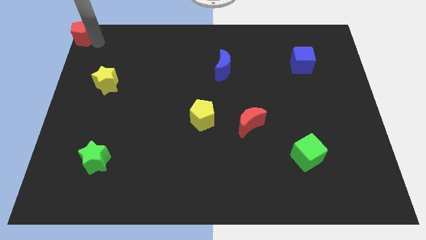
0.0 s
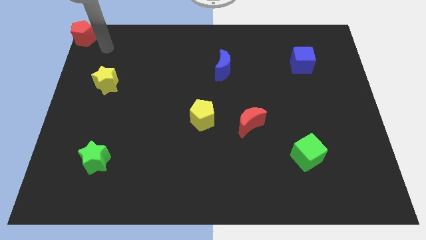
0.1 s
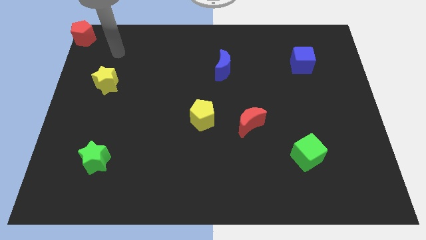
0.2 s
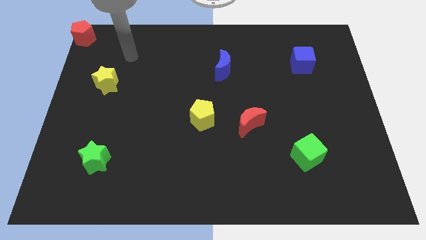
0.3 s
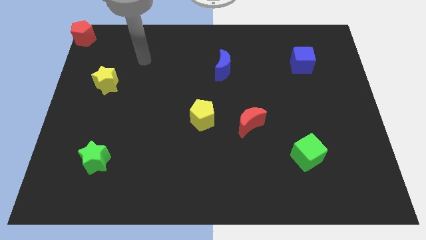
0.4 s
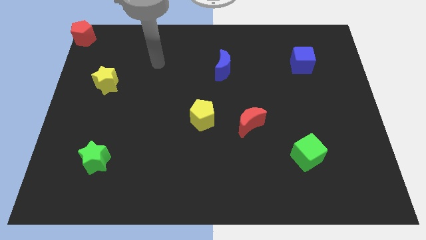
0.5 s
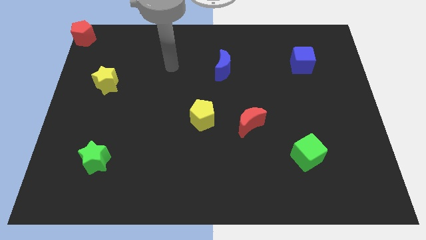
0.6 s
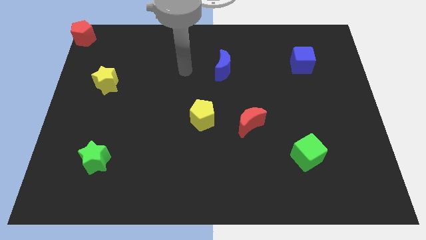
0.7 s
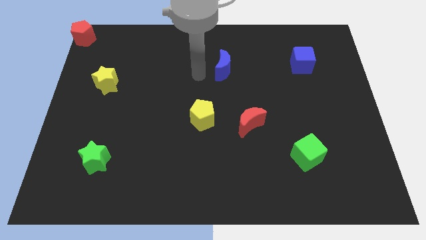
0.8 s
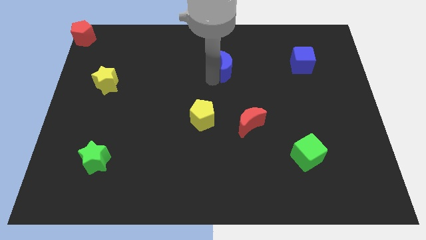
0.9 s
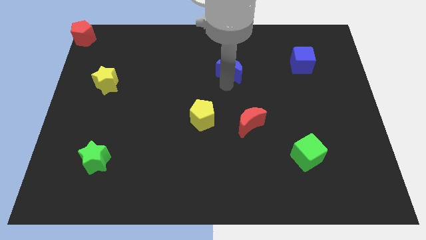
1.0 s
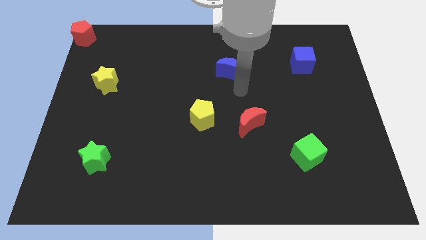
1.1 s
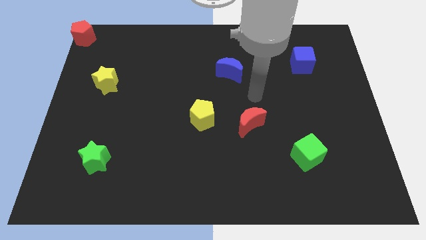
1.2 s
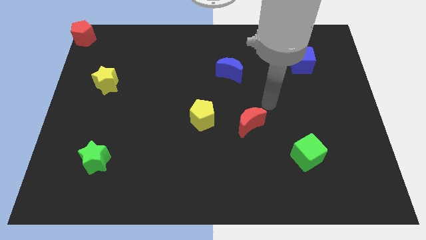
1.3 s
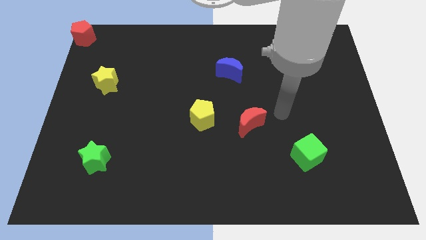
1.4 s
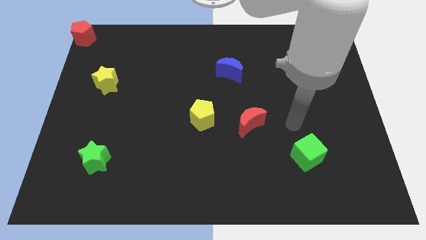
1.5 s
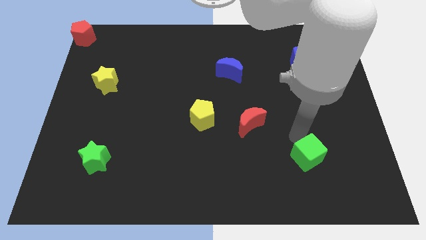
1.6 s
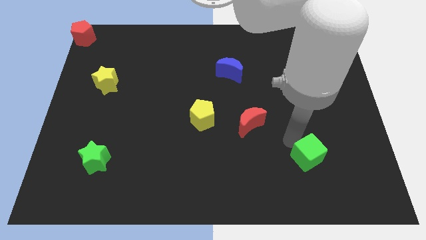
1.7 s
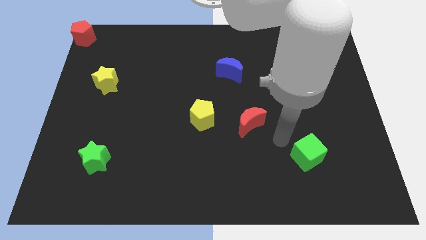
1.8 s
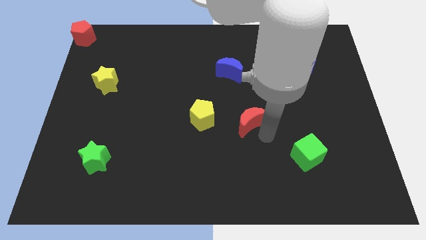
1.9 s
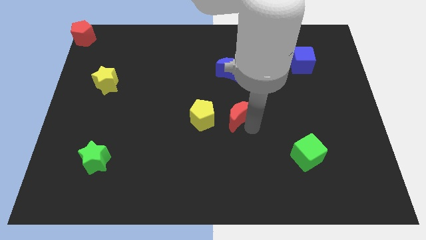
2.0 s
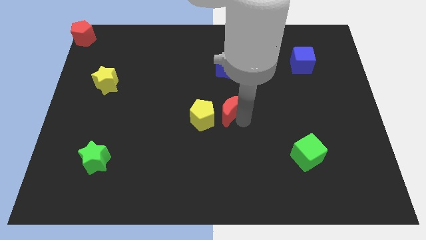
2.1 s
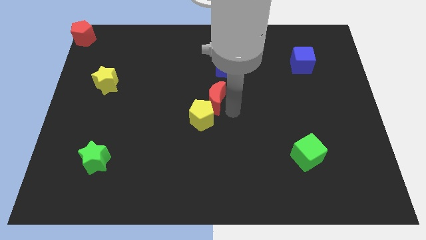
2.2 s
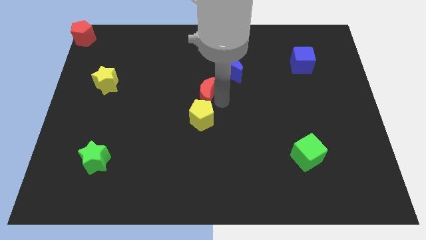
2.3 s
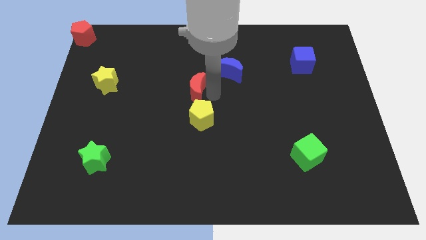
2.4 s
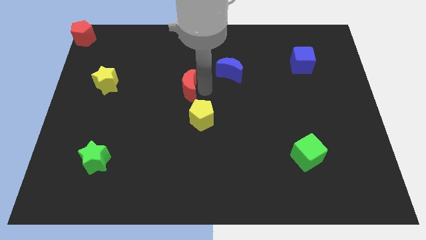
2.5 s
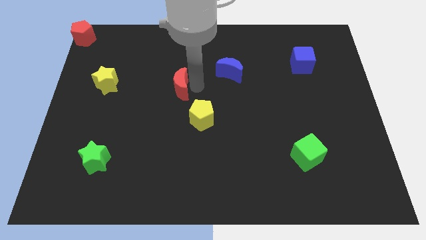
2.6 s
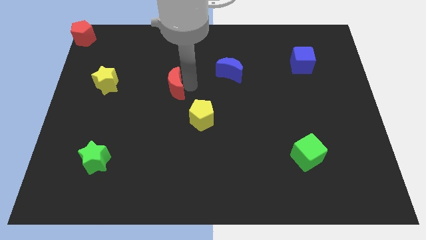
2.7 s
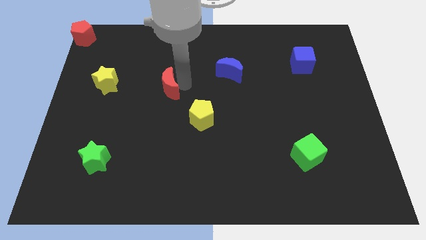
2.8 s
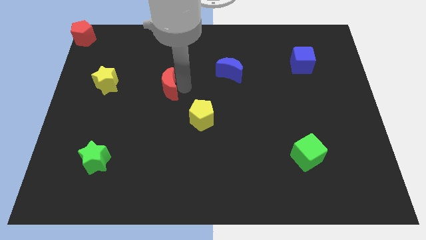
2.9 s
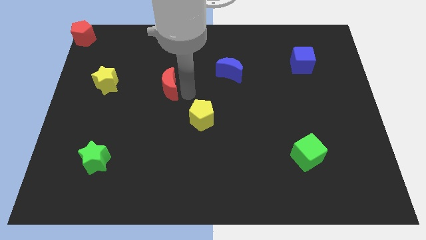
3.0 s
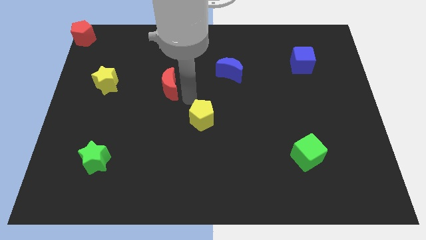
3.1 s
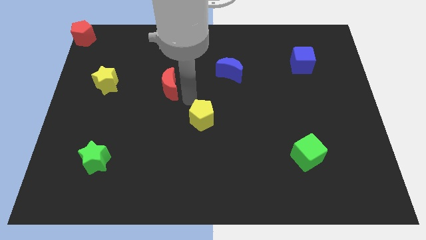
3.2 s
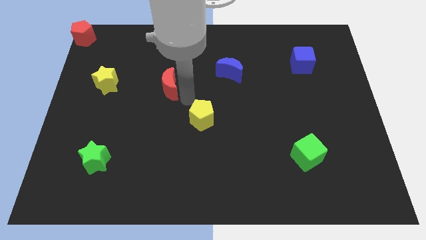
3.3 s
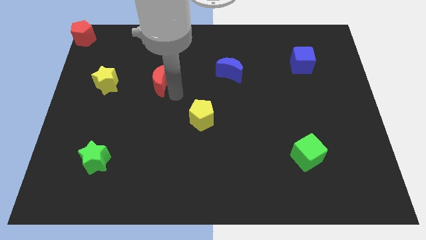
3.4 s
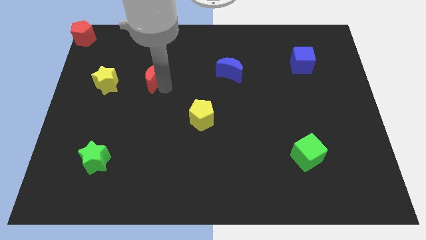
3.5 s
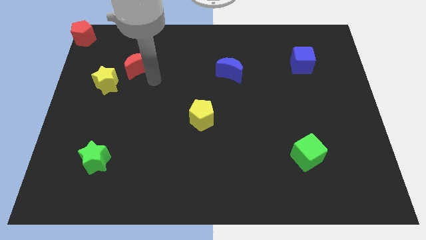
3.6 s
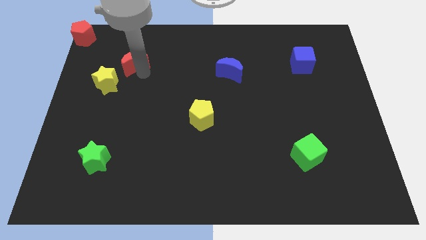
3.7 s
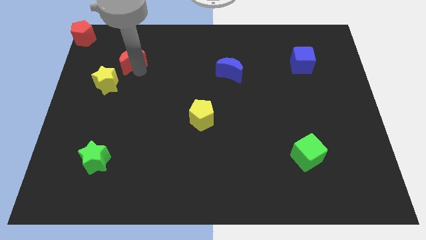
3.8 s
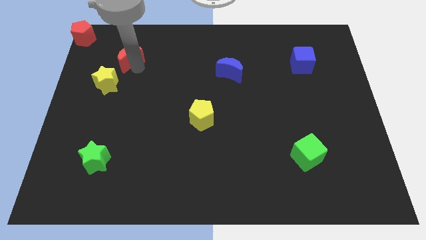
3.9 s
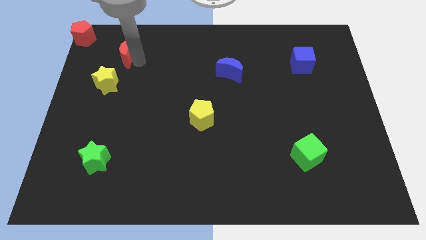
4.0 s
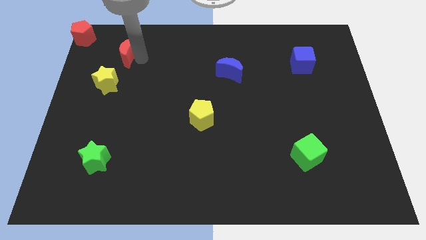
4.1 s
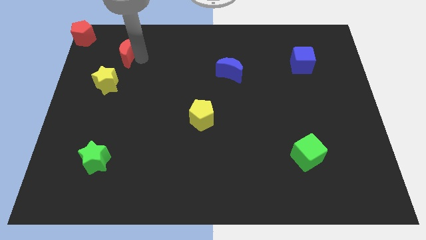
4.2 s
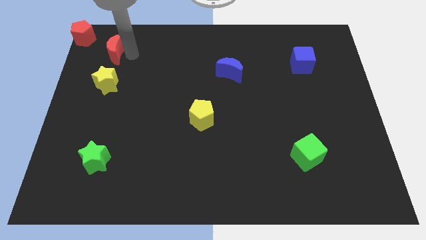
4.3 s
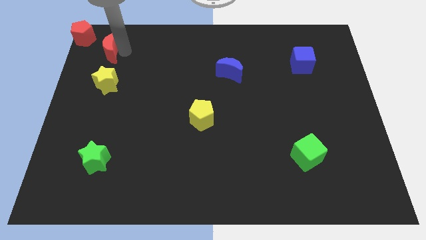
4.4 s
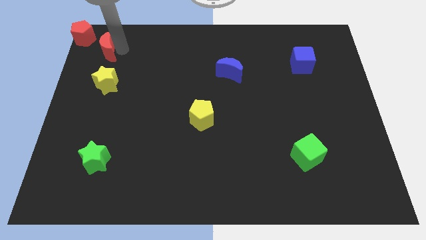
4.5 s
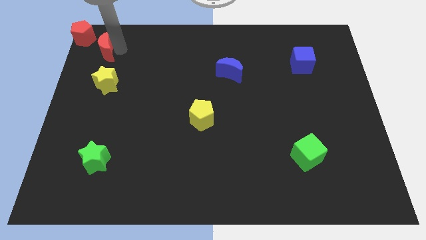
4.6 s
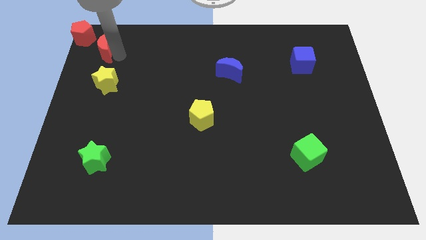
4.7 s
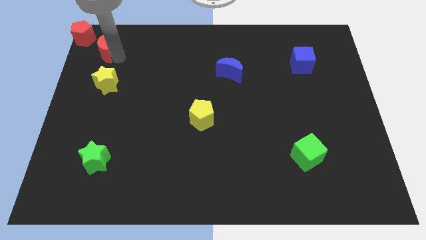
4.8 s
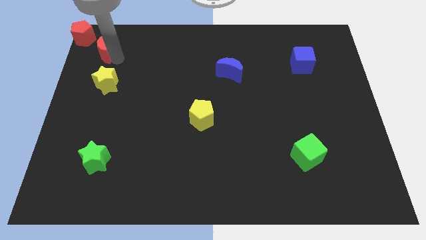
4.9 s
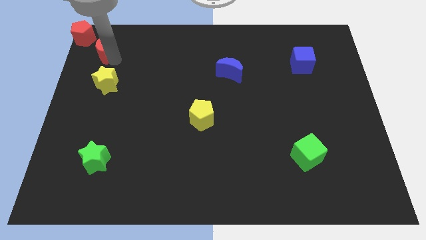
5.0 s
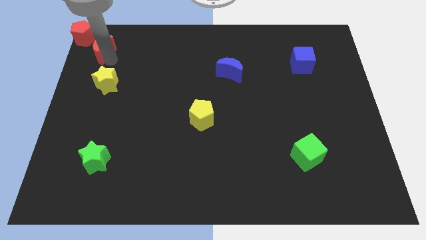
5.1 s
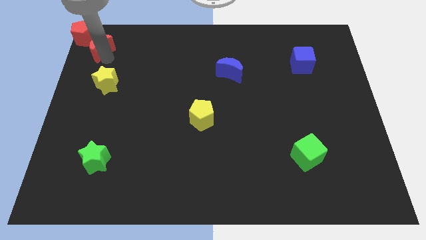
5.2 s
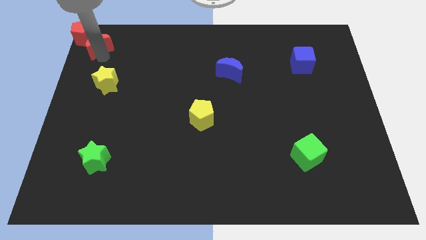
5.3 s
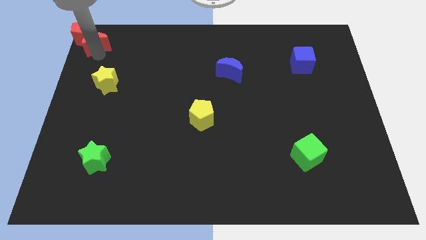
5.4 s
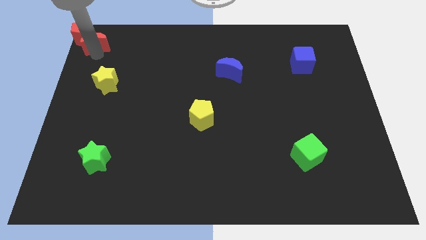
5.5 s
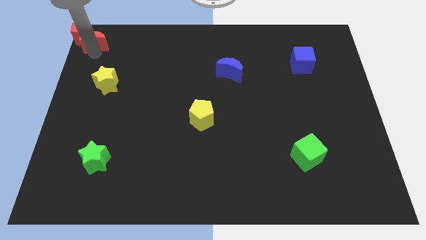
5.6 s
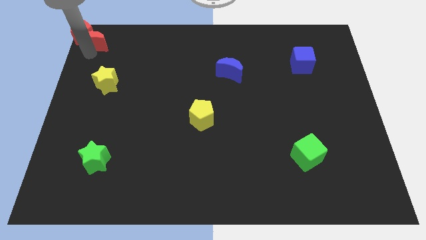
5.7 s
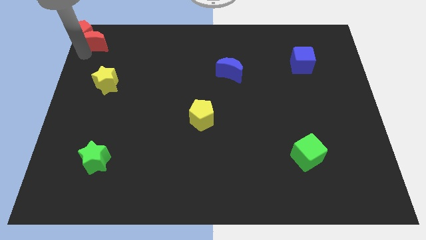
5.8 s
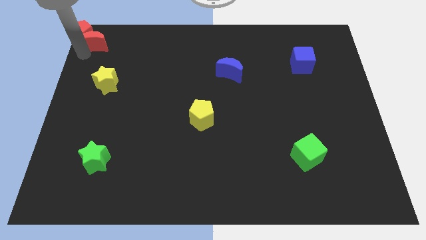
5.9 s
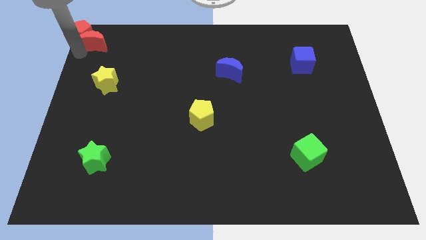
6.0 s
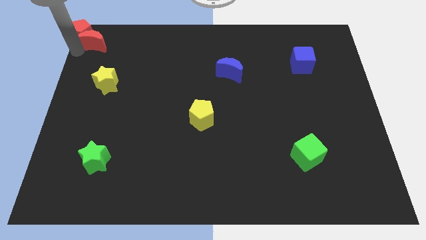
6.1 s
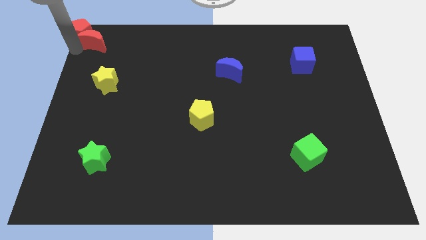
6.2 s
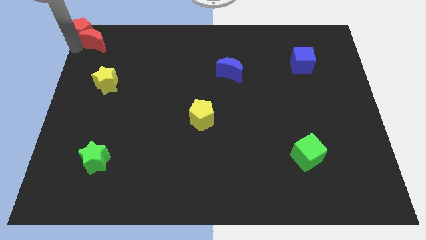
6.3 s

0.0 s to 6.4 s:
push the red crescent into the red pentagon

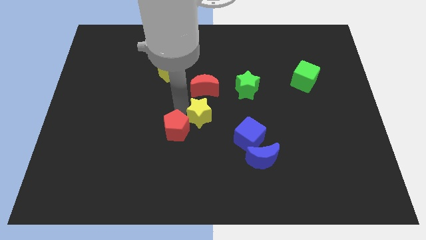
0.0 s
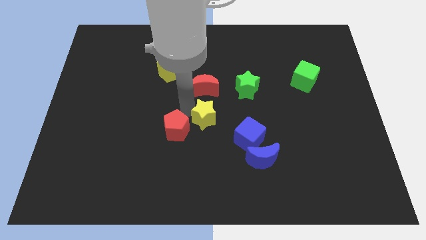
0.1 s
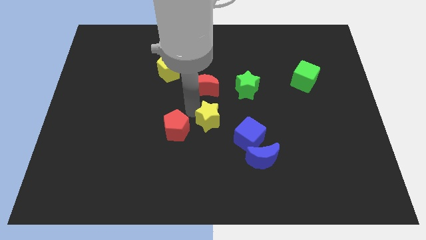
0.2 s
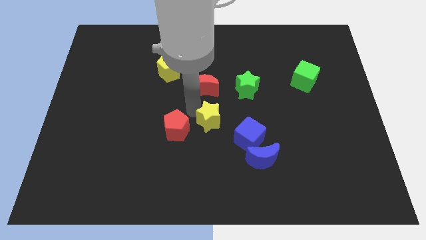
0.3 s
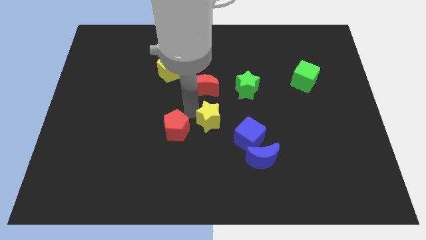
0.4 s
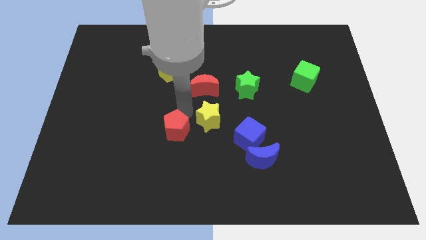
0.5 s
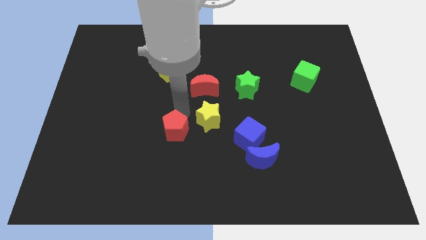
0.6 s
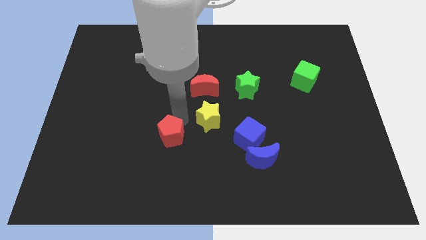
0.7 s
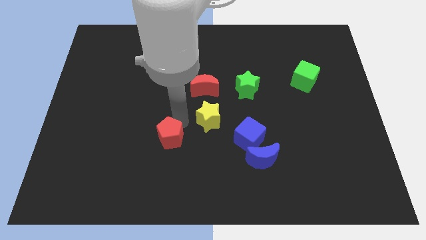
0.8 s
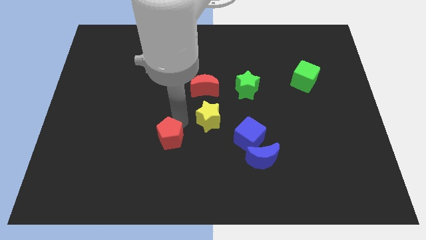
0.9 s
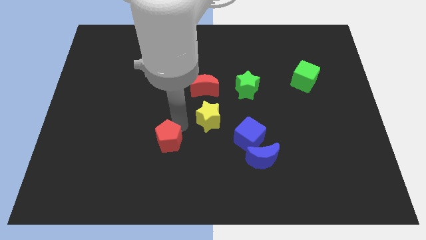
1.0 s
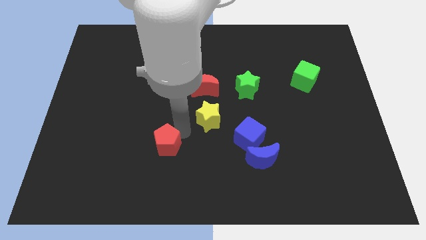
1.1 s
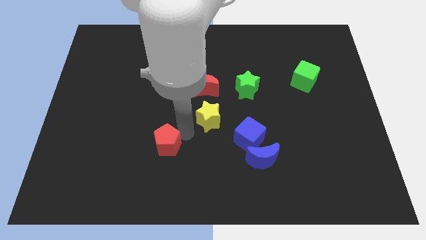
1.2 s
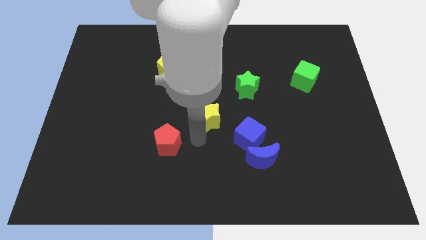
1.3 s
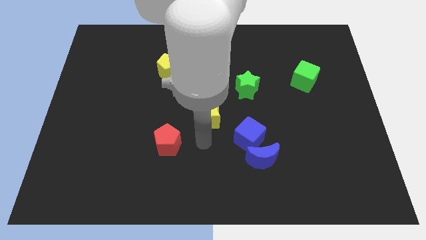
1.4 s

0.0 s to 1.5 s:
separate the yellow star and red pentagon

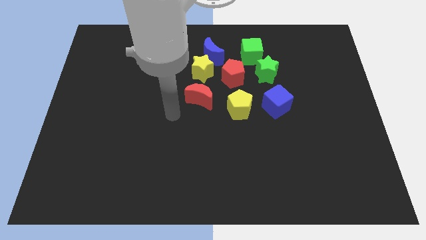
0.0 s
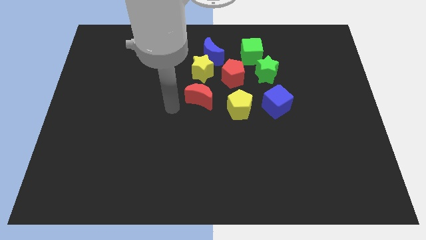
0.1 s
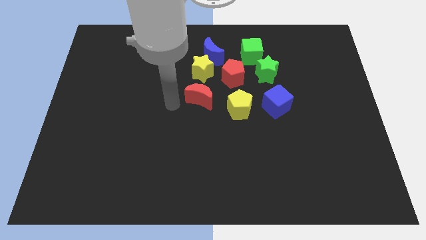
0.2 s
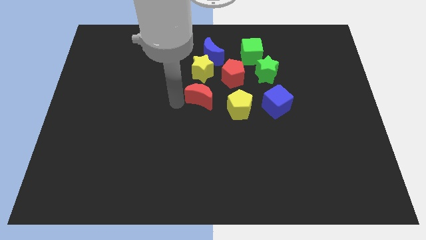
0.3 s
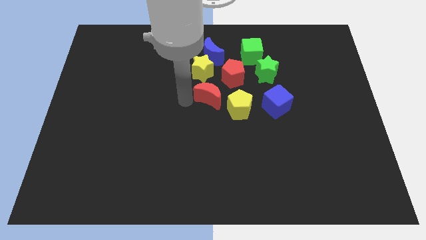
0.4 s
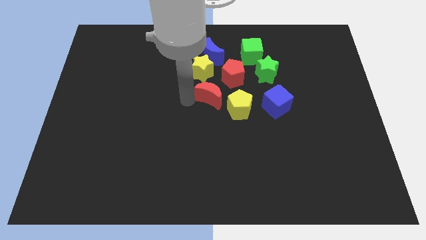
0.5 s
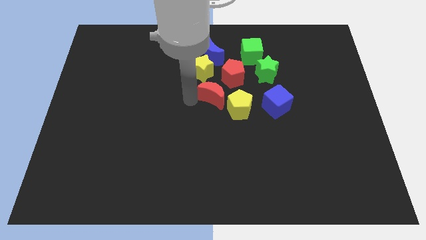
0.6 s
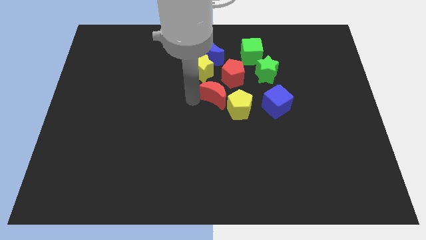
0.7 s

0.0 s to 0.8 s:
move the red moon to the top left of yellow pentagon

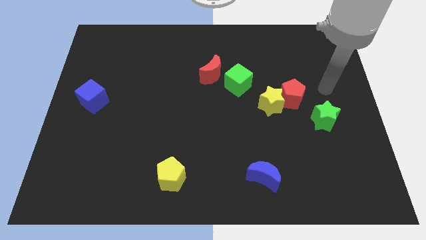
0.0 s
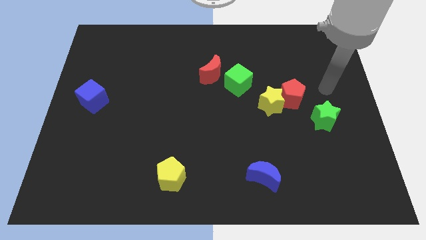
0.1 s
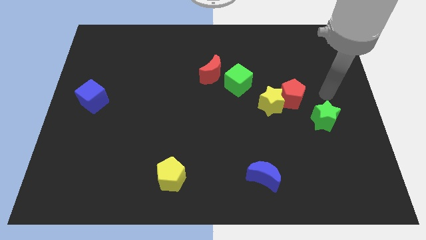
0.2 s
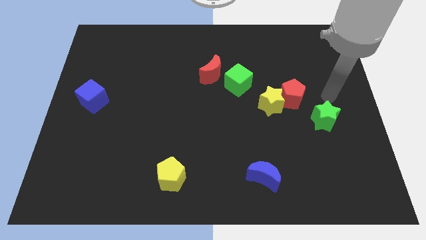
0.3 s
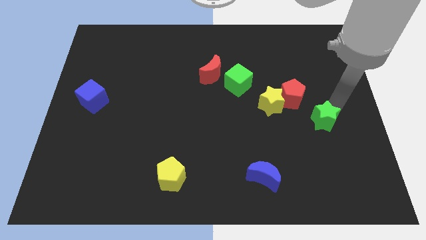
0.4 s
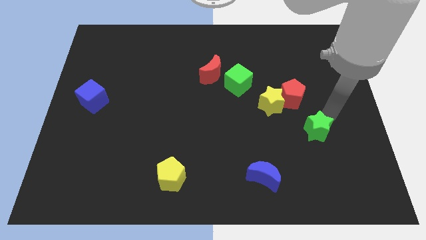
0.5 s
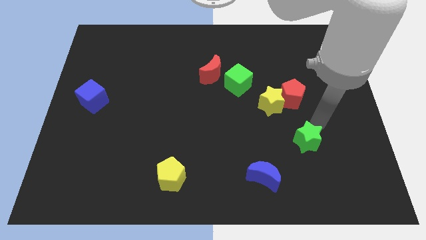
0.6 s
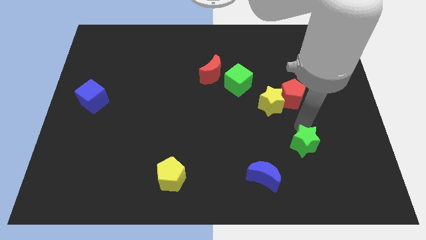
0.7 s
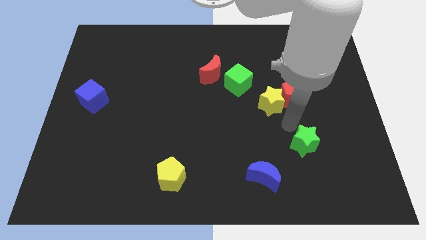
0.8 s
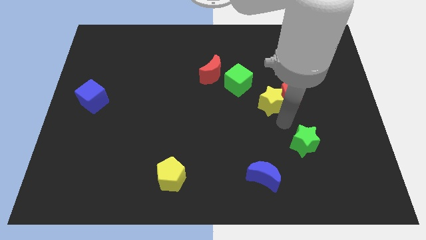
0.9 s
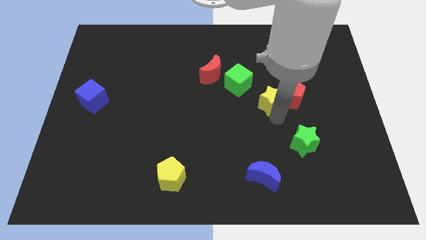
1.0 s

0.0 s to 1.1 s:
place the green star vertically below the red pentagon
